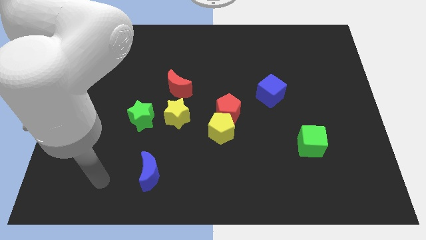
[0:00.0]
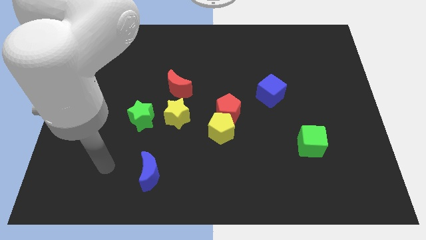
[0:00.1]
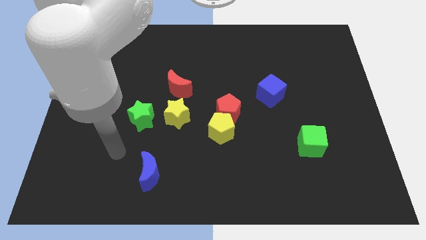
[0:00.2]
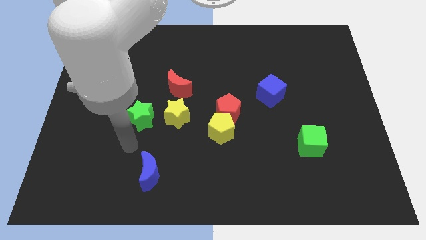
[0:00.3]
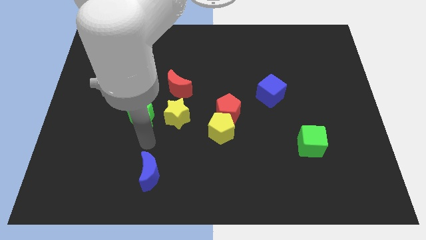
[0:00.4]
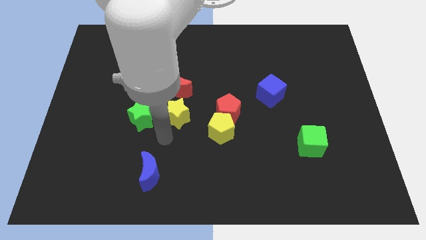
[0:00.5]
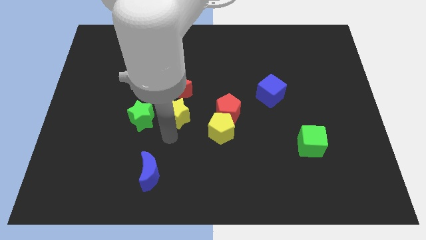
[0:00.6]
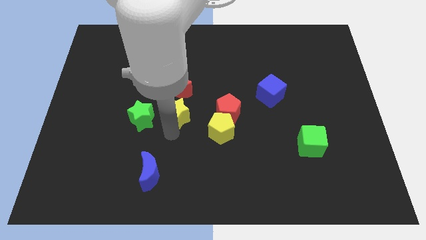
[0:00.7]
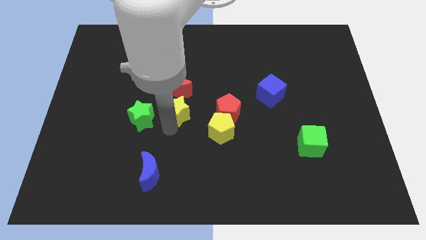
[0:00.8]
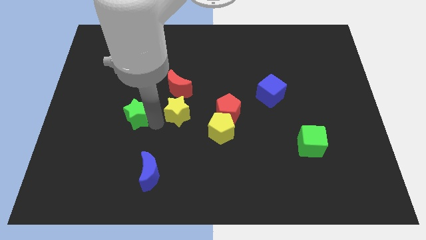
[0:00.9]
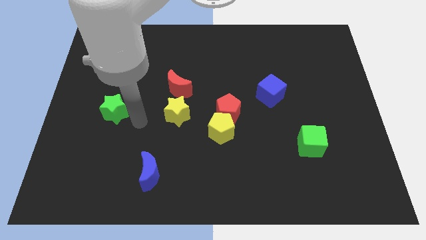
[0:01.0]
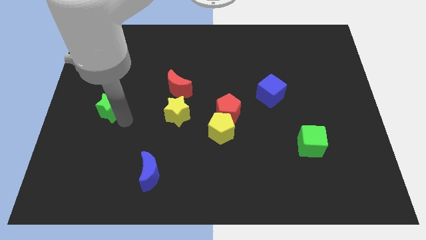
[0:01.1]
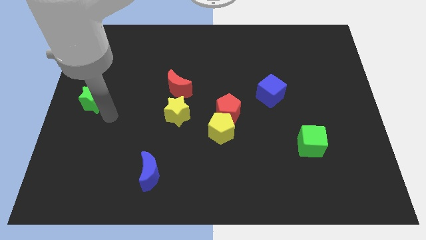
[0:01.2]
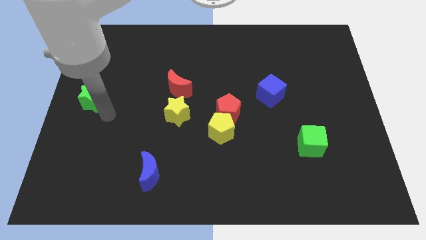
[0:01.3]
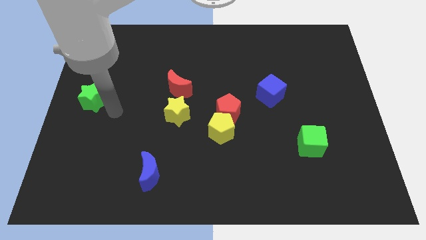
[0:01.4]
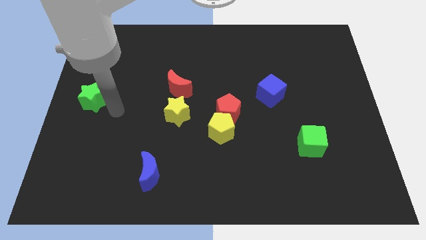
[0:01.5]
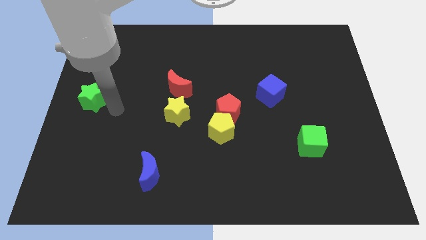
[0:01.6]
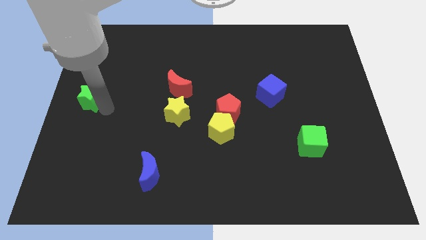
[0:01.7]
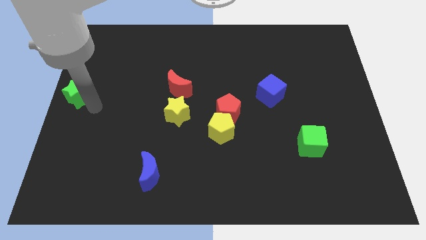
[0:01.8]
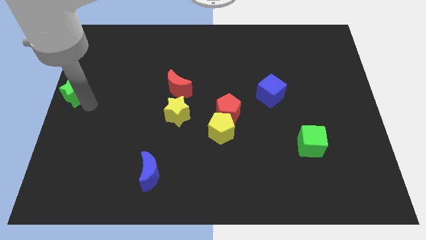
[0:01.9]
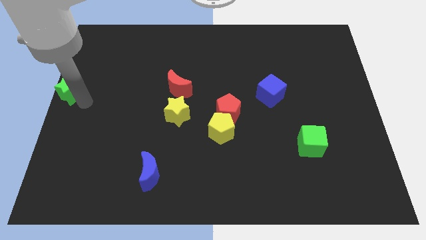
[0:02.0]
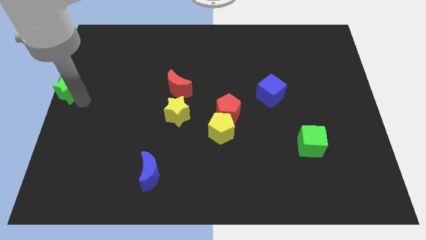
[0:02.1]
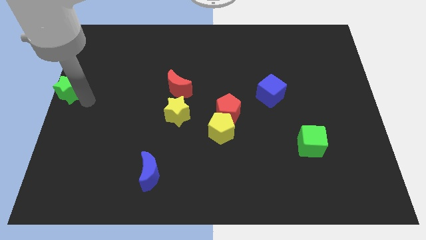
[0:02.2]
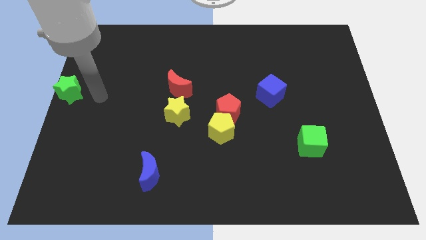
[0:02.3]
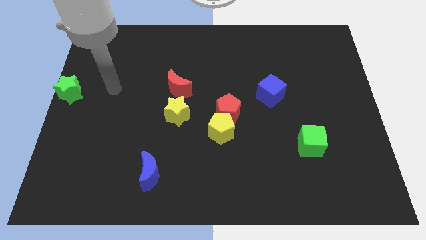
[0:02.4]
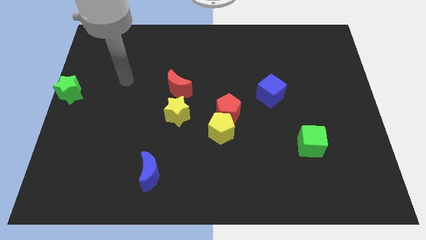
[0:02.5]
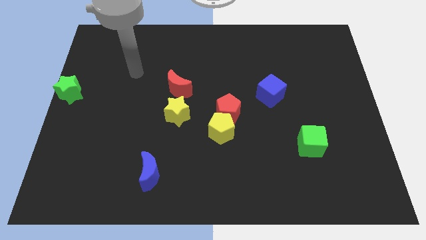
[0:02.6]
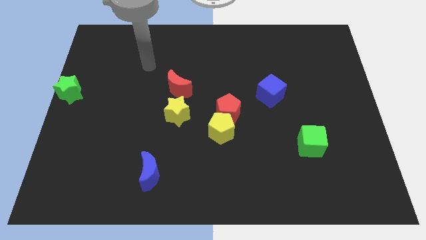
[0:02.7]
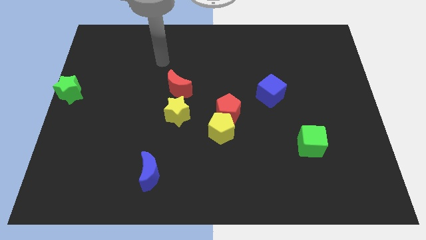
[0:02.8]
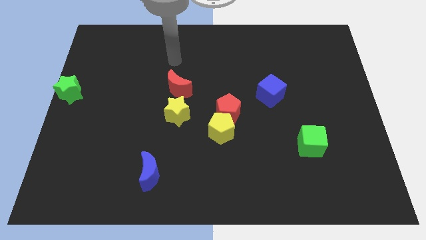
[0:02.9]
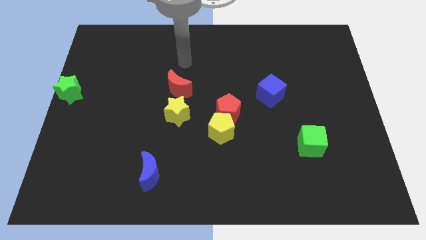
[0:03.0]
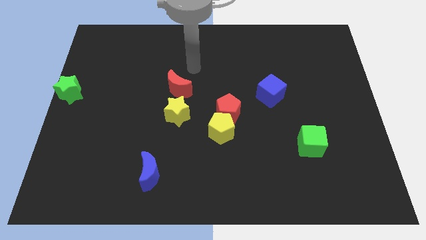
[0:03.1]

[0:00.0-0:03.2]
place the green star horizontally to the left side of the red crescent

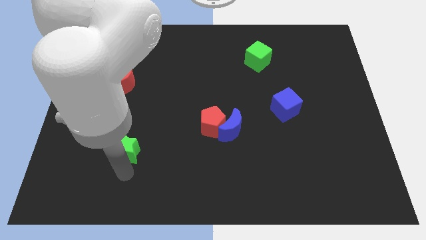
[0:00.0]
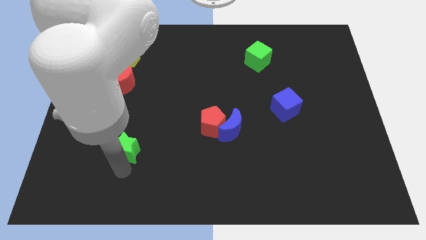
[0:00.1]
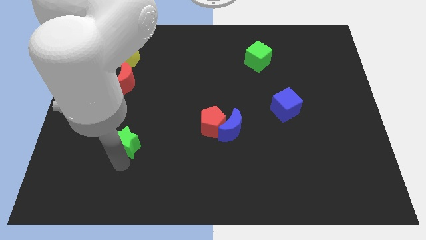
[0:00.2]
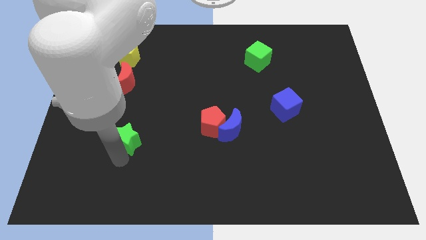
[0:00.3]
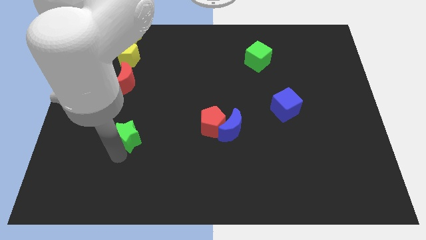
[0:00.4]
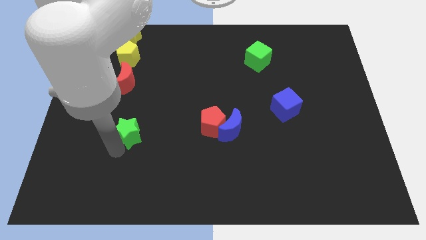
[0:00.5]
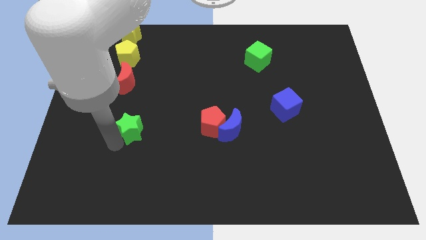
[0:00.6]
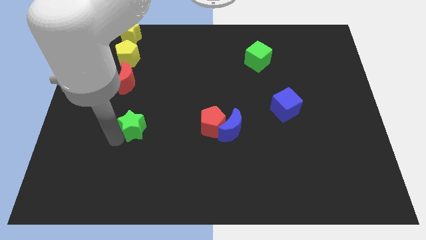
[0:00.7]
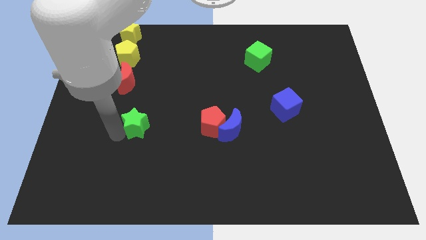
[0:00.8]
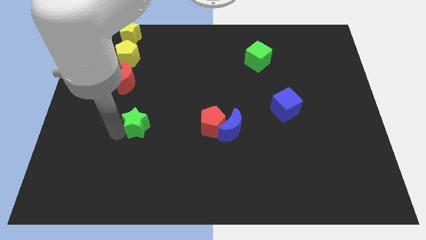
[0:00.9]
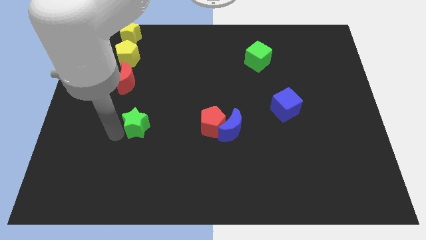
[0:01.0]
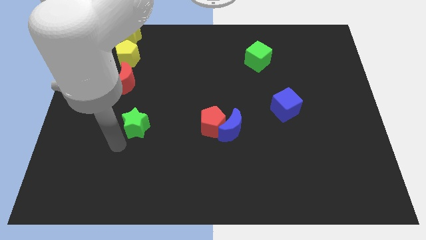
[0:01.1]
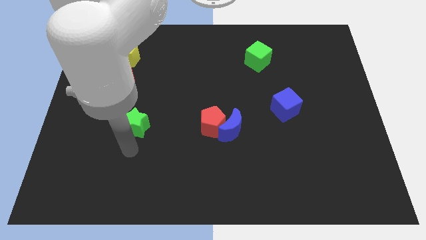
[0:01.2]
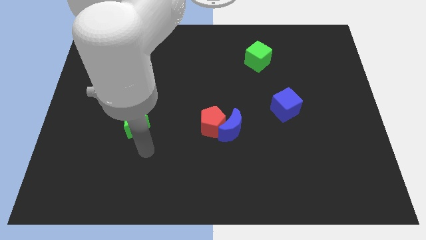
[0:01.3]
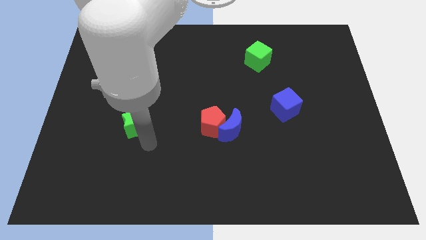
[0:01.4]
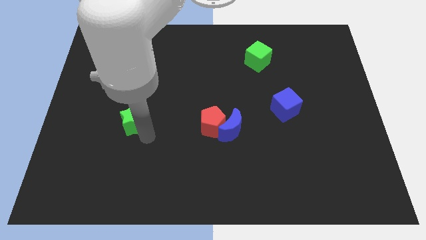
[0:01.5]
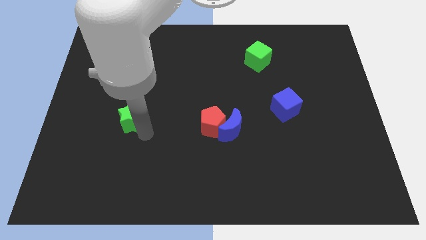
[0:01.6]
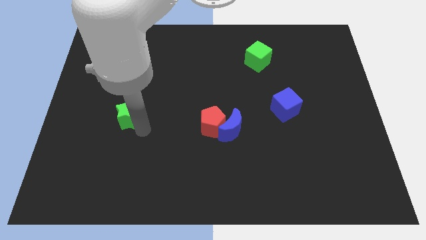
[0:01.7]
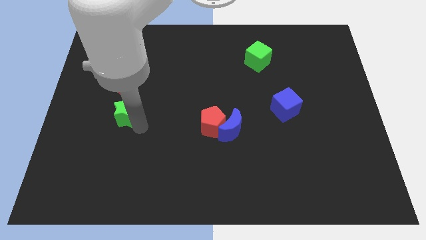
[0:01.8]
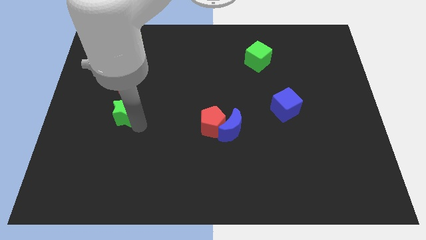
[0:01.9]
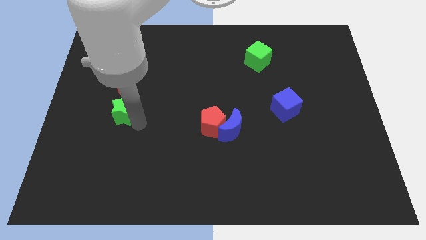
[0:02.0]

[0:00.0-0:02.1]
move green star towards red moon

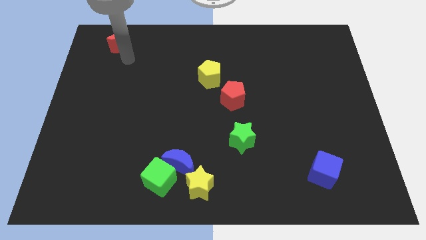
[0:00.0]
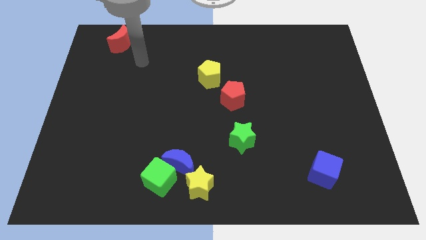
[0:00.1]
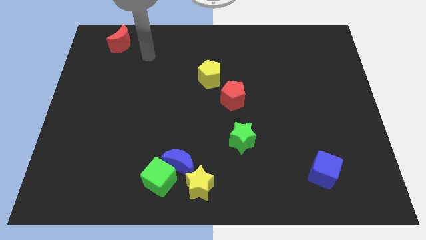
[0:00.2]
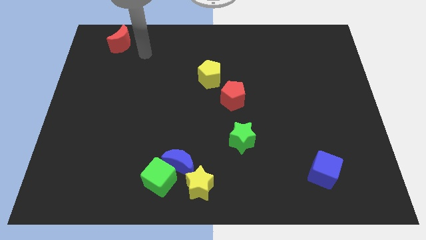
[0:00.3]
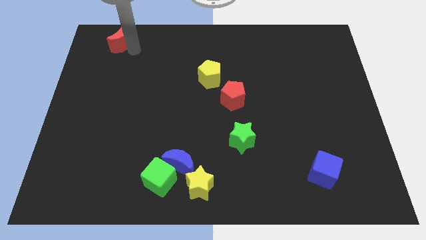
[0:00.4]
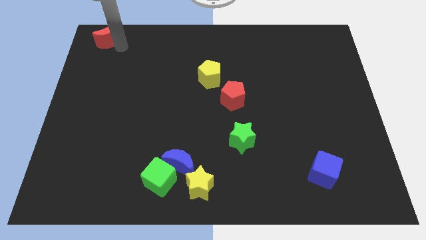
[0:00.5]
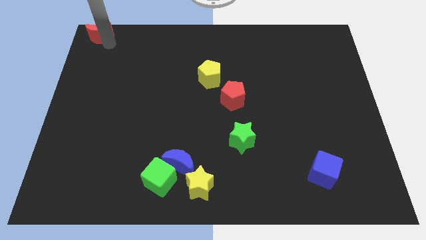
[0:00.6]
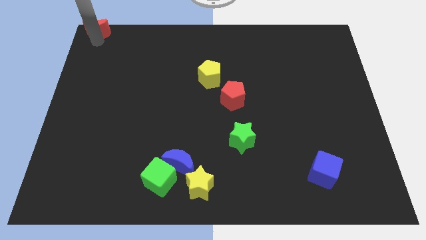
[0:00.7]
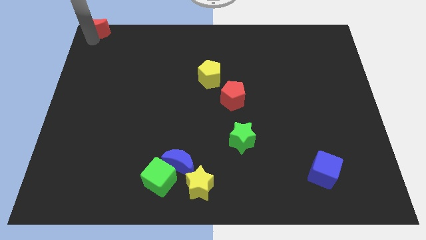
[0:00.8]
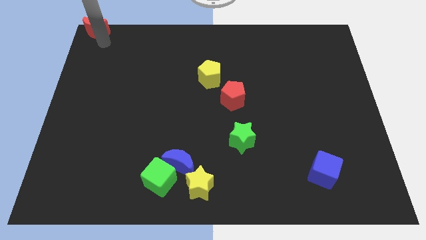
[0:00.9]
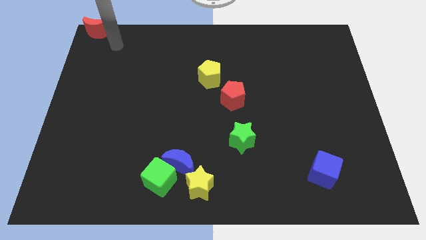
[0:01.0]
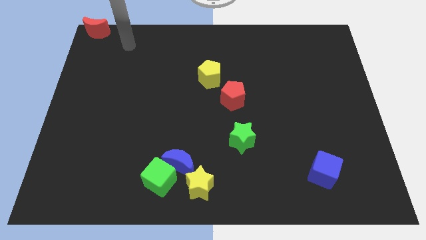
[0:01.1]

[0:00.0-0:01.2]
place the red crescent at the top left corner of the board

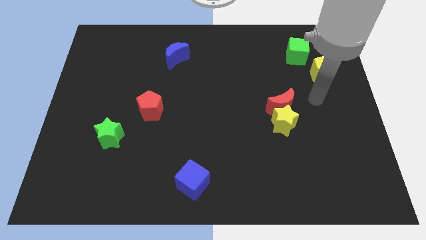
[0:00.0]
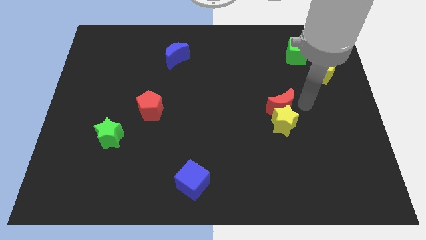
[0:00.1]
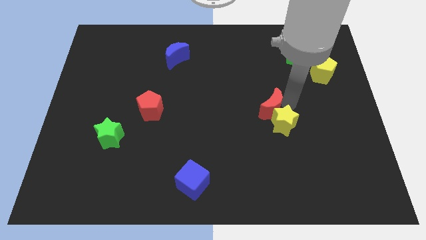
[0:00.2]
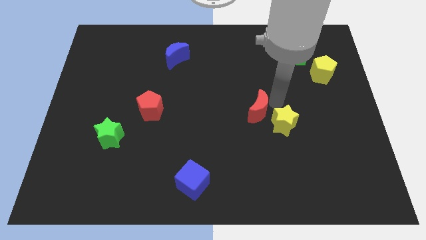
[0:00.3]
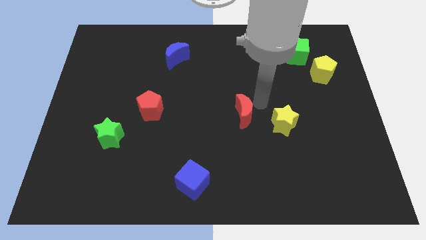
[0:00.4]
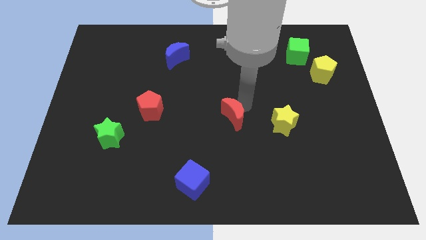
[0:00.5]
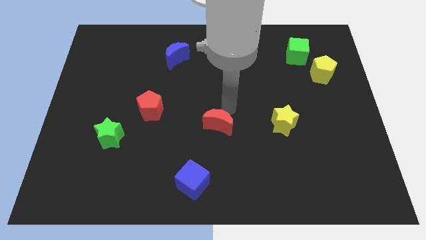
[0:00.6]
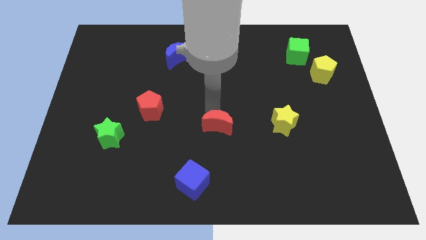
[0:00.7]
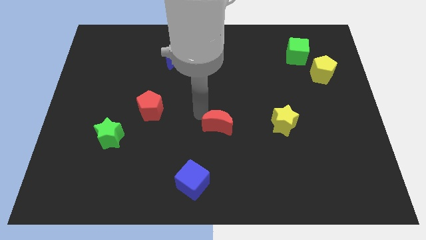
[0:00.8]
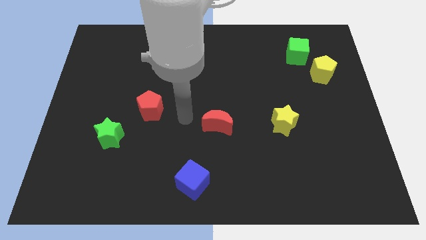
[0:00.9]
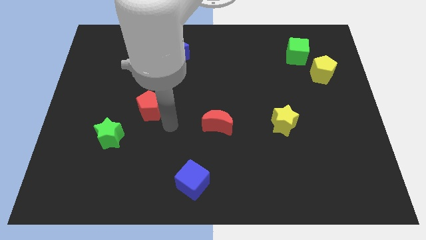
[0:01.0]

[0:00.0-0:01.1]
move red moon middle of the board

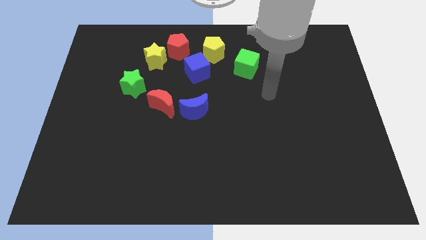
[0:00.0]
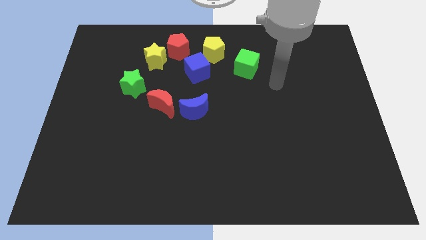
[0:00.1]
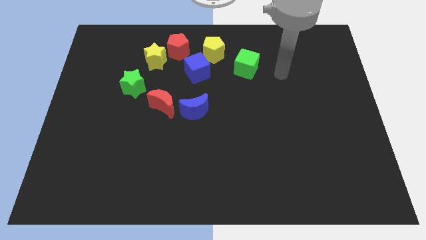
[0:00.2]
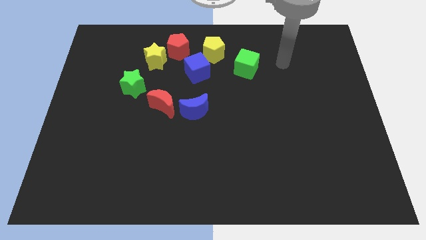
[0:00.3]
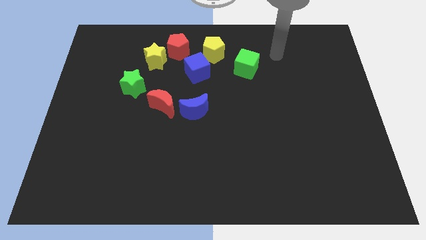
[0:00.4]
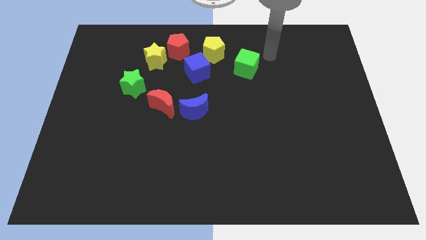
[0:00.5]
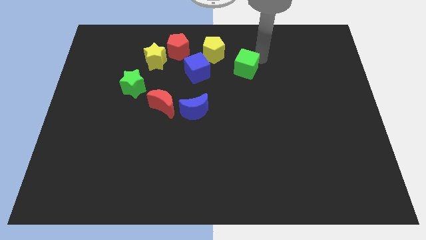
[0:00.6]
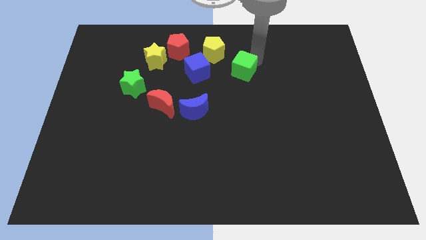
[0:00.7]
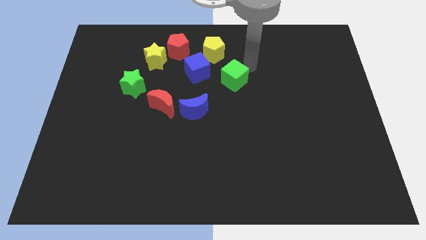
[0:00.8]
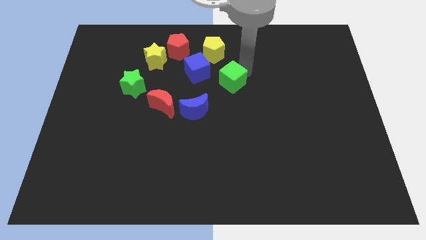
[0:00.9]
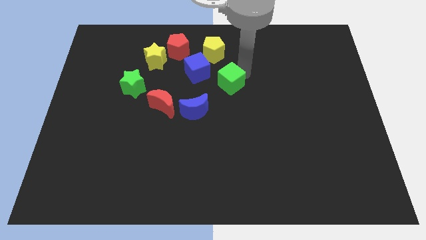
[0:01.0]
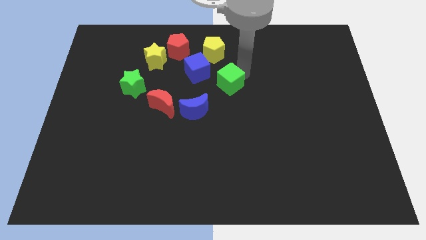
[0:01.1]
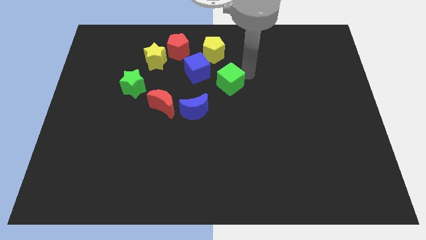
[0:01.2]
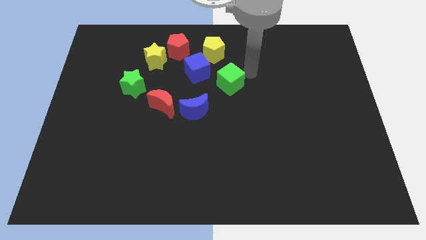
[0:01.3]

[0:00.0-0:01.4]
place green cube below yellow pentagon
